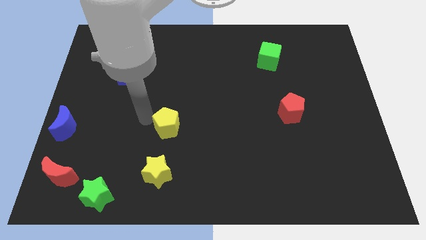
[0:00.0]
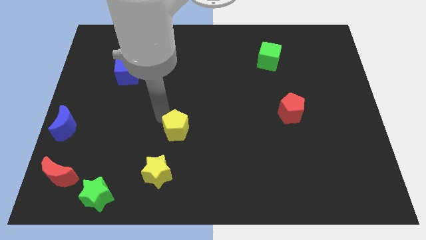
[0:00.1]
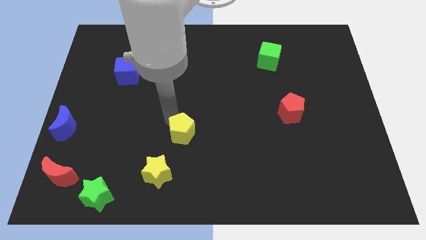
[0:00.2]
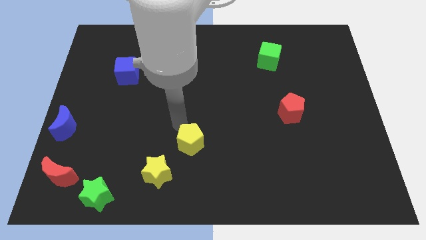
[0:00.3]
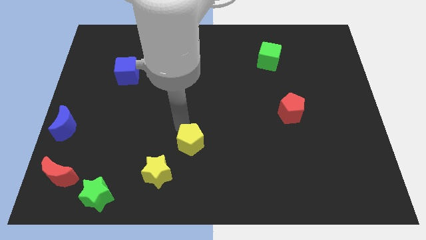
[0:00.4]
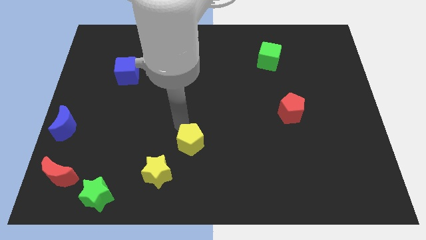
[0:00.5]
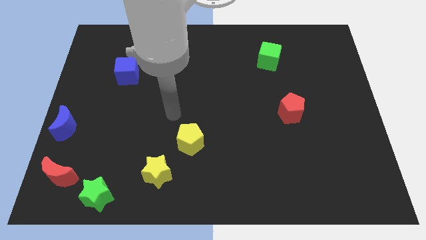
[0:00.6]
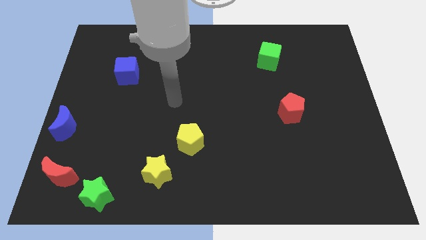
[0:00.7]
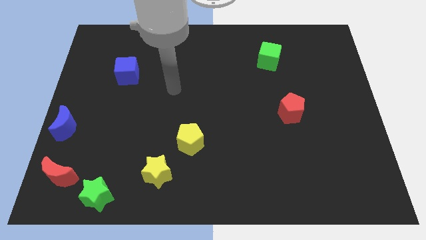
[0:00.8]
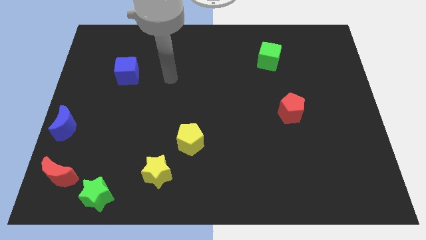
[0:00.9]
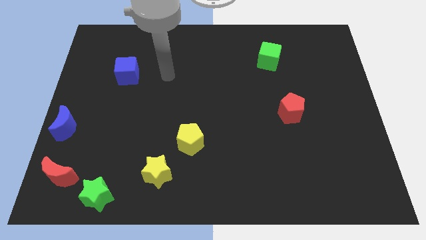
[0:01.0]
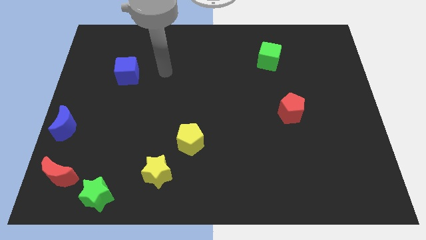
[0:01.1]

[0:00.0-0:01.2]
place the yellow pentagon diagonal to the green cube

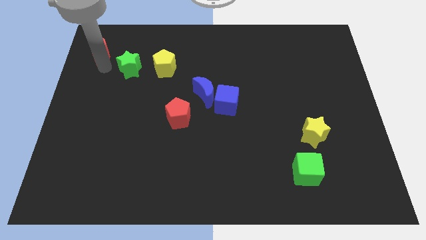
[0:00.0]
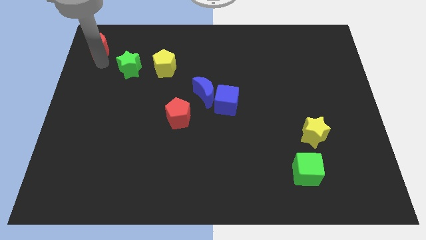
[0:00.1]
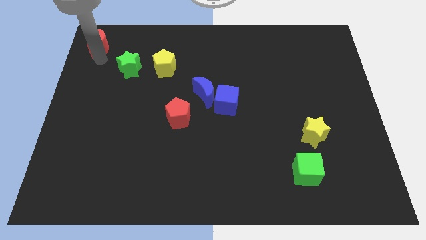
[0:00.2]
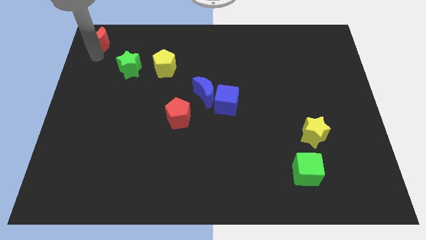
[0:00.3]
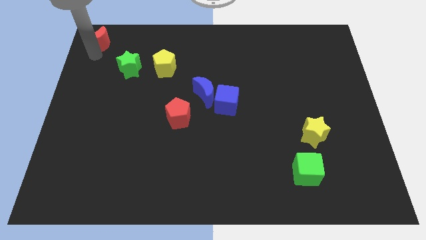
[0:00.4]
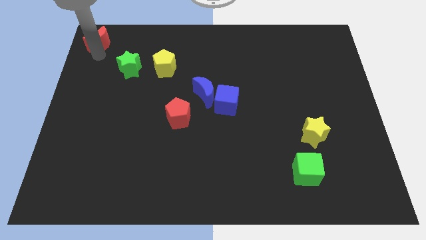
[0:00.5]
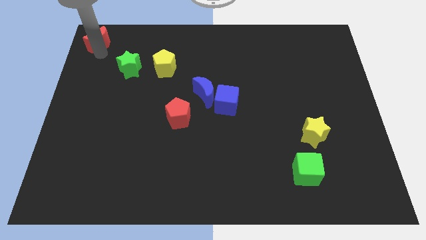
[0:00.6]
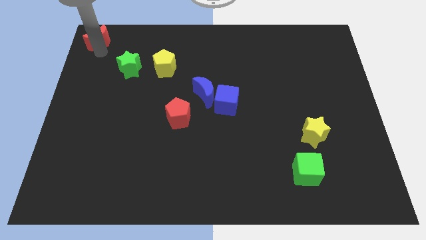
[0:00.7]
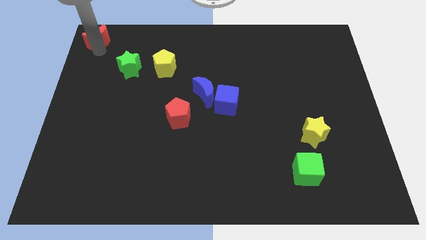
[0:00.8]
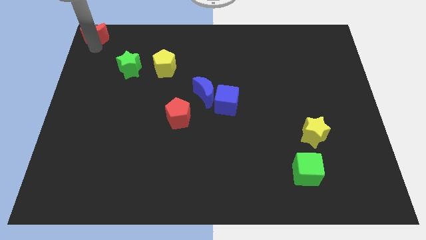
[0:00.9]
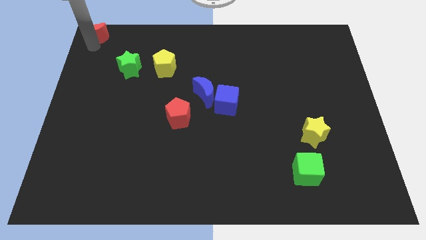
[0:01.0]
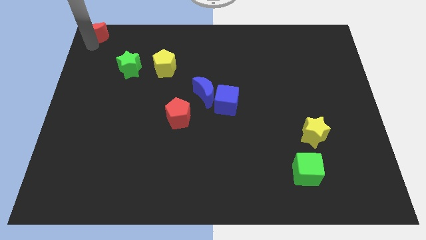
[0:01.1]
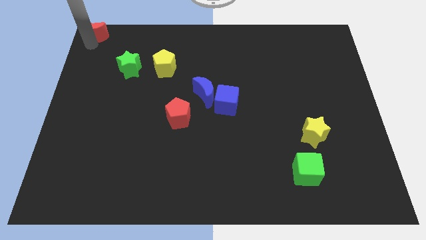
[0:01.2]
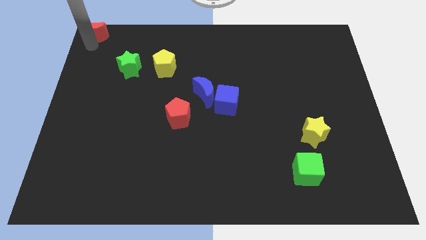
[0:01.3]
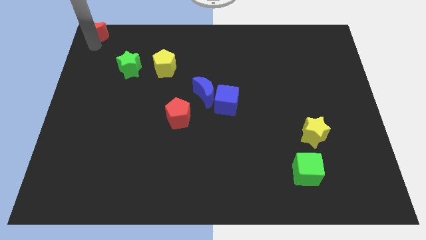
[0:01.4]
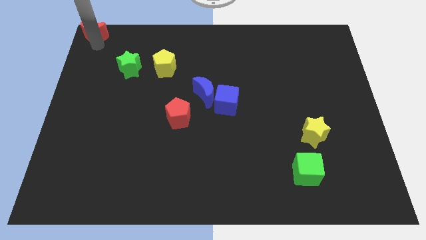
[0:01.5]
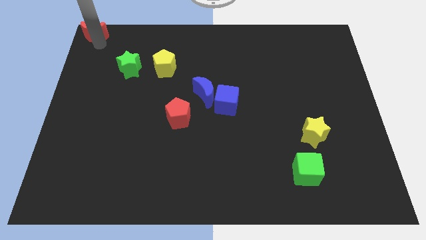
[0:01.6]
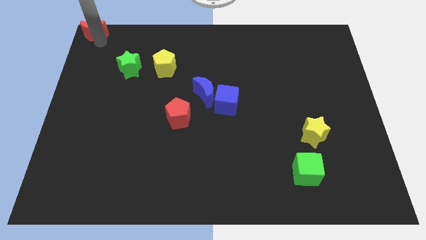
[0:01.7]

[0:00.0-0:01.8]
place red crescent towards top left corner

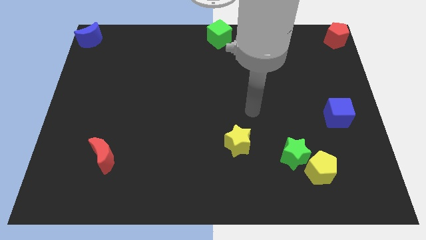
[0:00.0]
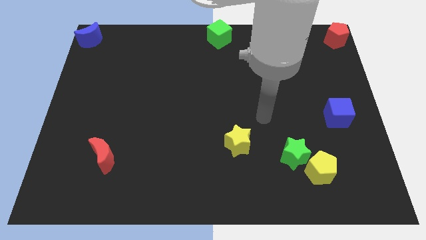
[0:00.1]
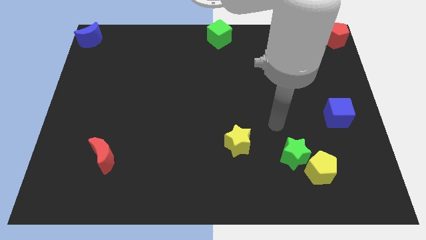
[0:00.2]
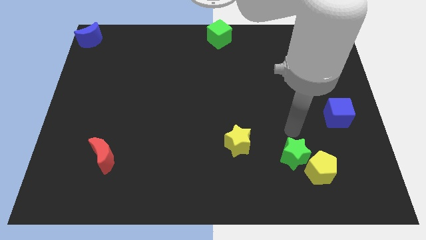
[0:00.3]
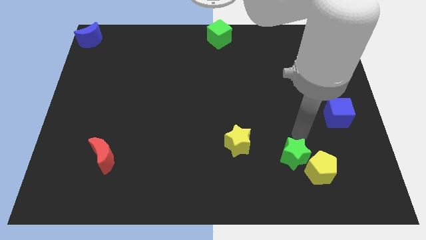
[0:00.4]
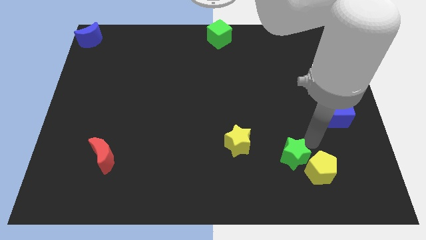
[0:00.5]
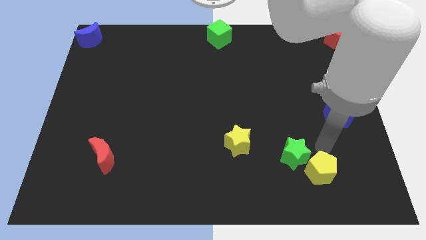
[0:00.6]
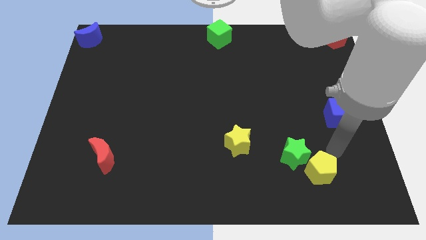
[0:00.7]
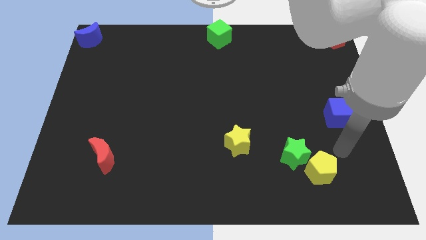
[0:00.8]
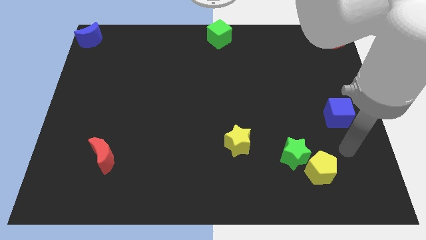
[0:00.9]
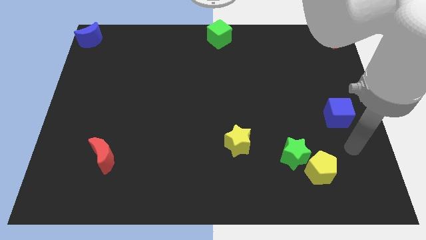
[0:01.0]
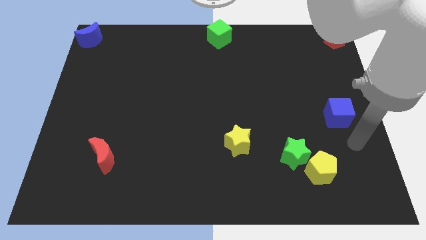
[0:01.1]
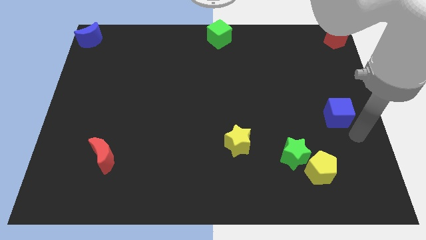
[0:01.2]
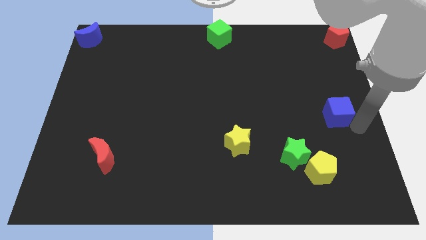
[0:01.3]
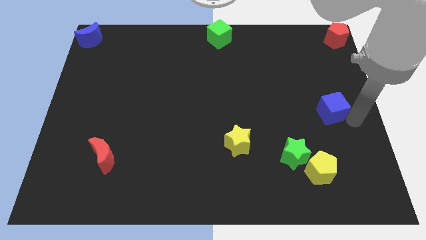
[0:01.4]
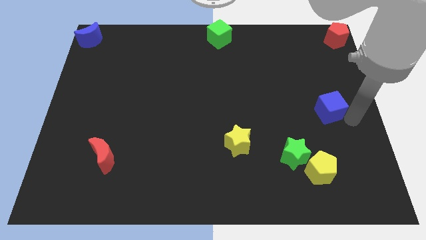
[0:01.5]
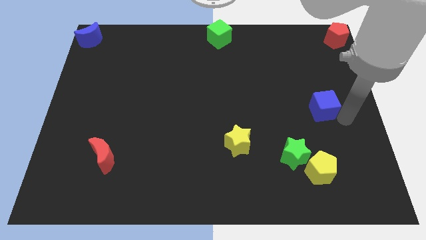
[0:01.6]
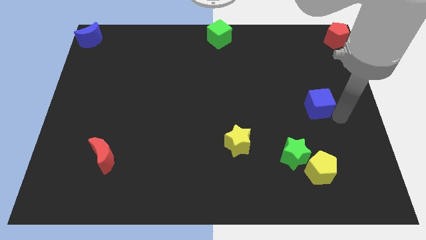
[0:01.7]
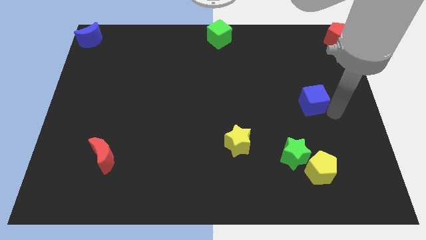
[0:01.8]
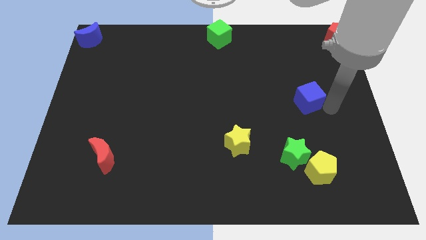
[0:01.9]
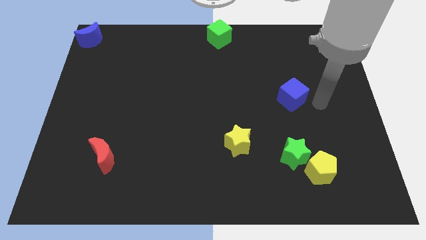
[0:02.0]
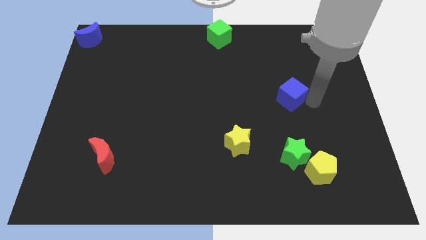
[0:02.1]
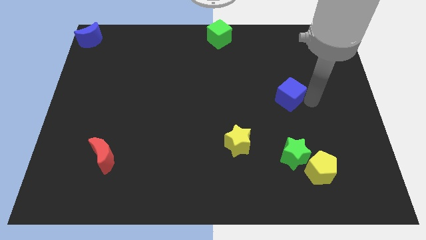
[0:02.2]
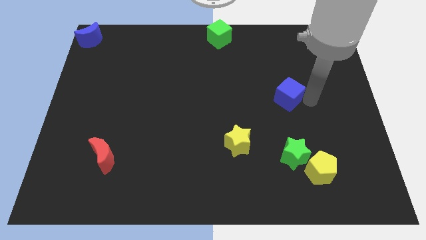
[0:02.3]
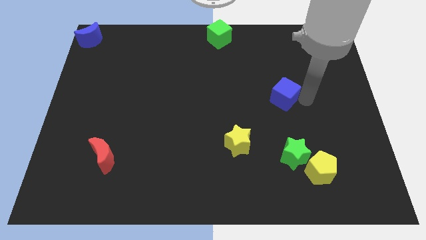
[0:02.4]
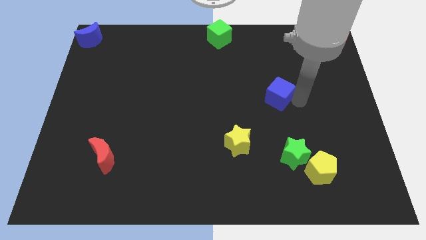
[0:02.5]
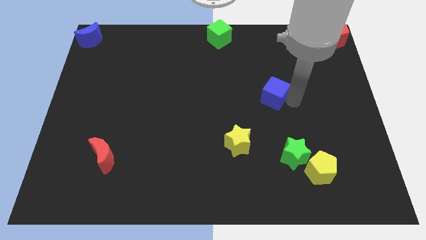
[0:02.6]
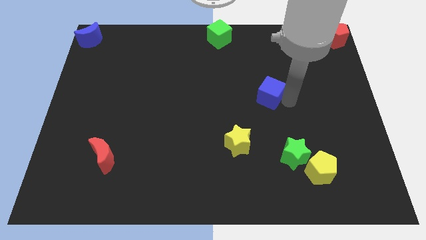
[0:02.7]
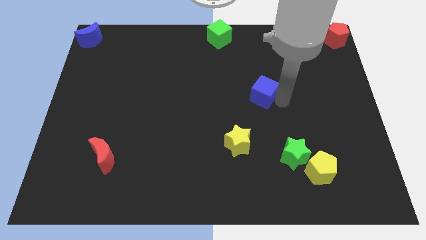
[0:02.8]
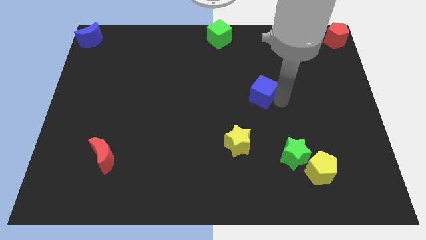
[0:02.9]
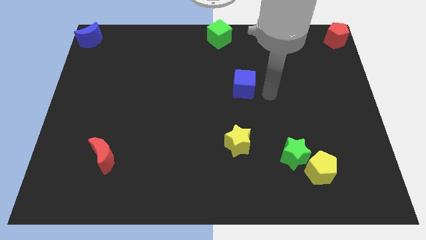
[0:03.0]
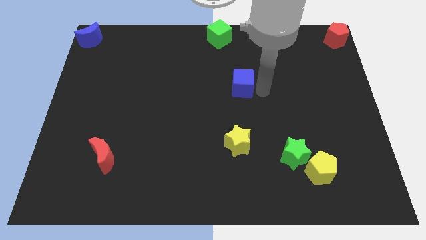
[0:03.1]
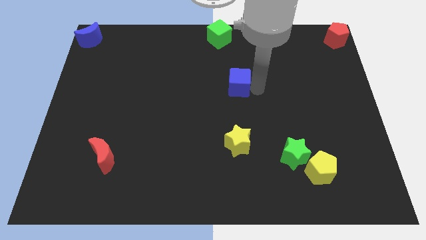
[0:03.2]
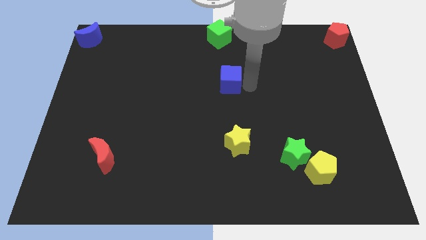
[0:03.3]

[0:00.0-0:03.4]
move the blue cube to the top of the yellow star

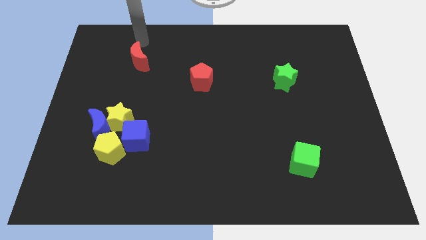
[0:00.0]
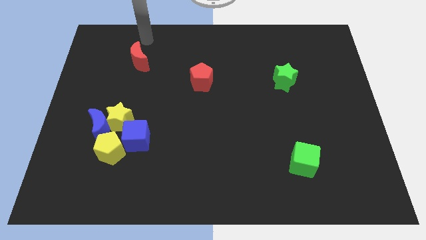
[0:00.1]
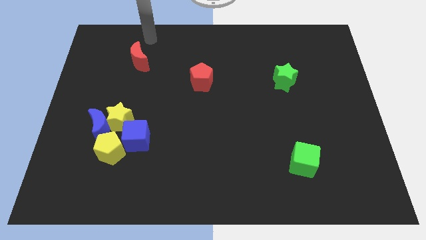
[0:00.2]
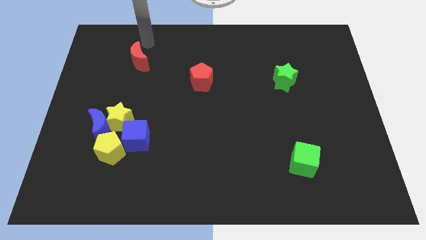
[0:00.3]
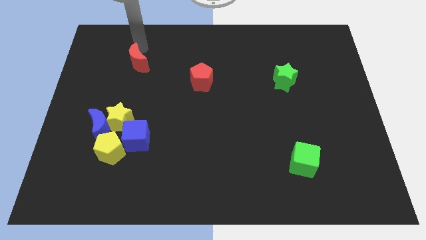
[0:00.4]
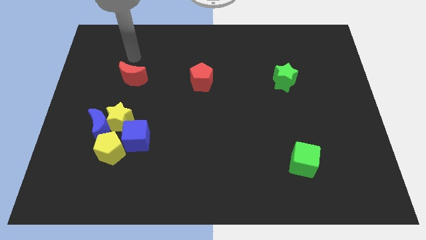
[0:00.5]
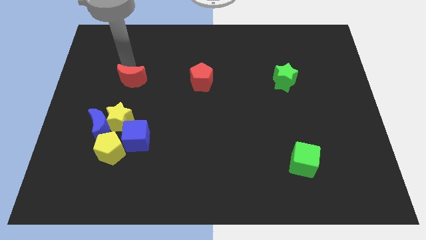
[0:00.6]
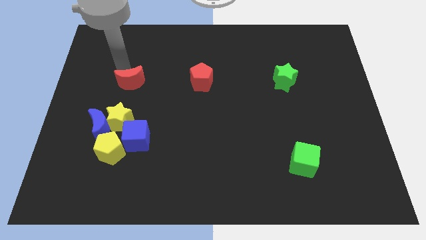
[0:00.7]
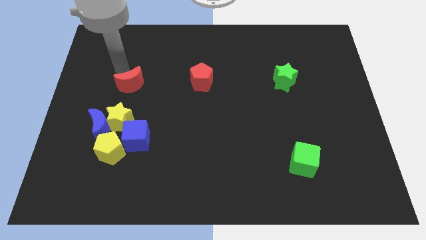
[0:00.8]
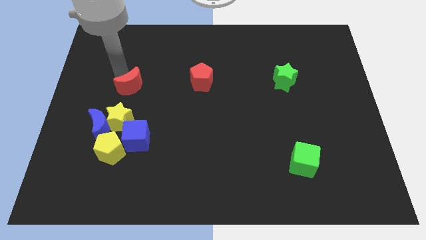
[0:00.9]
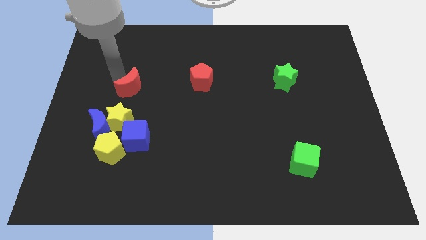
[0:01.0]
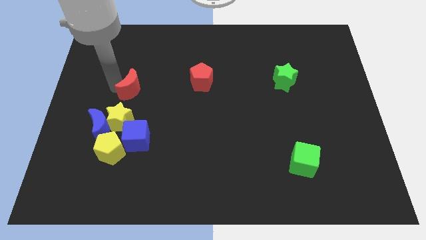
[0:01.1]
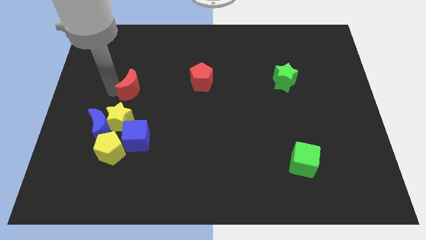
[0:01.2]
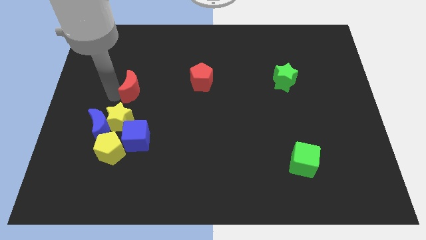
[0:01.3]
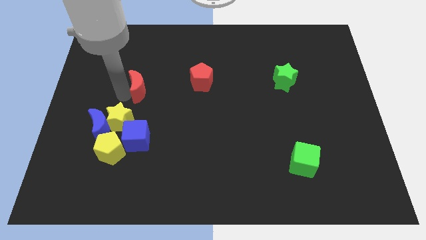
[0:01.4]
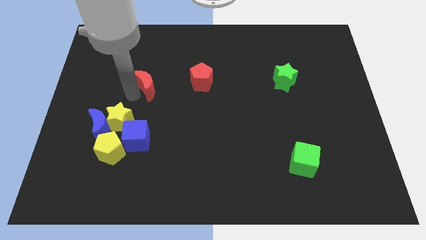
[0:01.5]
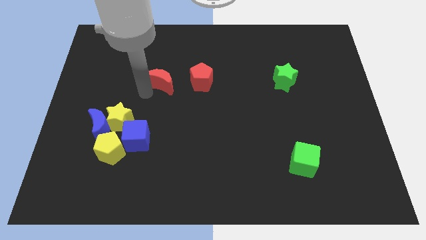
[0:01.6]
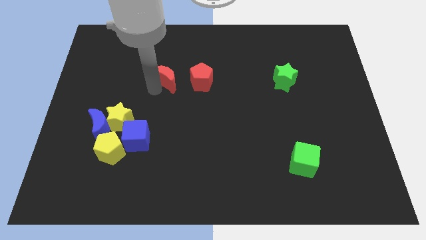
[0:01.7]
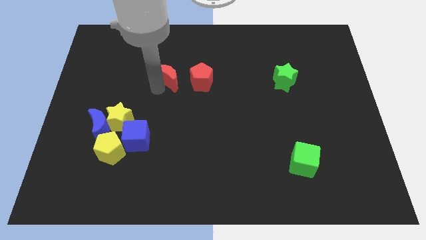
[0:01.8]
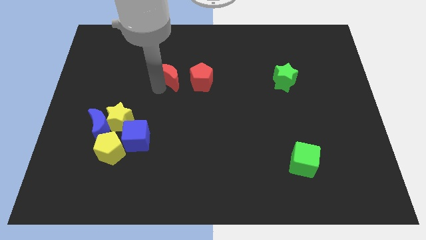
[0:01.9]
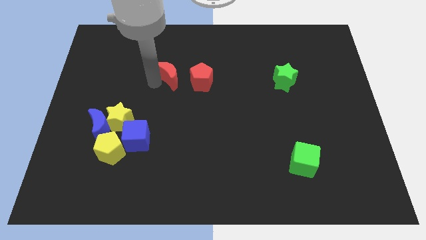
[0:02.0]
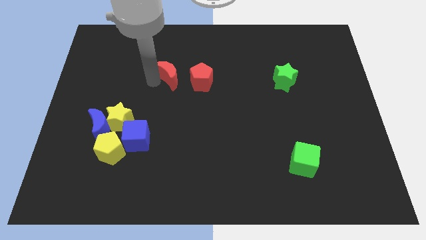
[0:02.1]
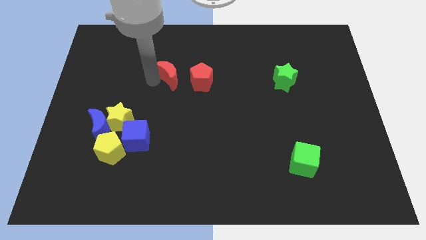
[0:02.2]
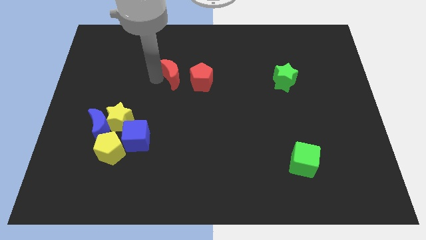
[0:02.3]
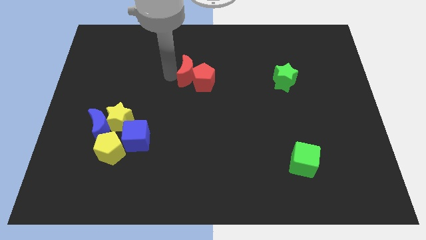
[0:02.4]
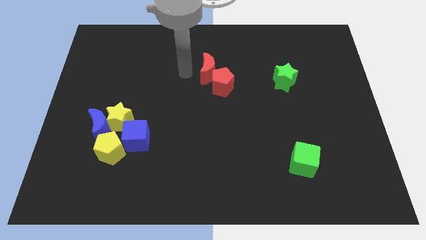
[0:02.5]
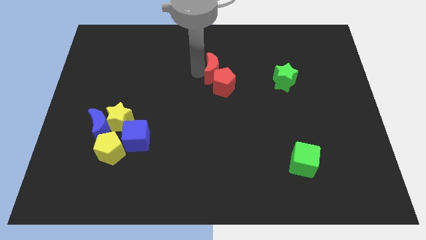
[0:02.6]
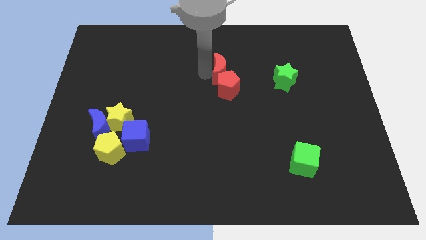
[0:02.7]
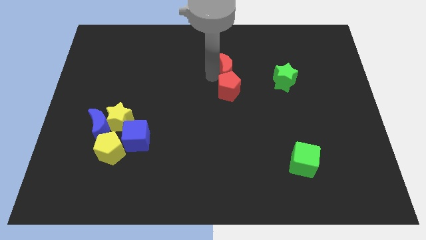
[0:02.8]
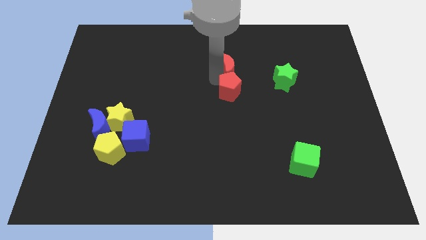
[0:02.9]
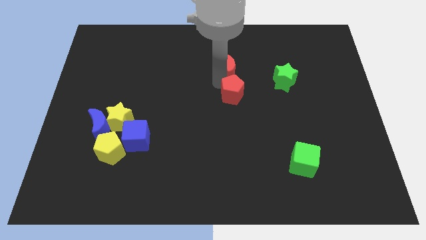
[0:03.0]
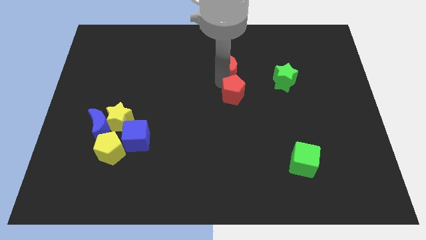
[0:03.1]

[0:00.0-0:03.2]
move the red crescent to the top of the red pentagon
